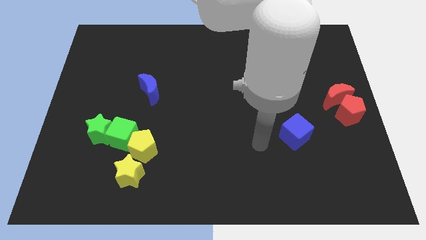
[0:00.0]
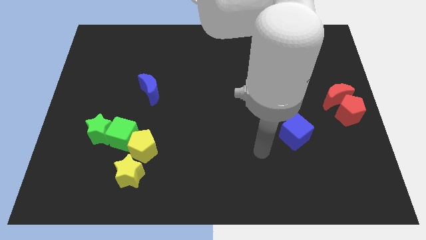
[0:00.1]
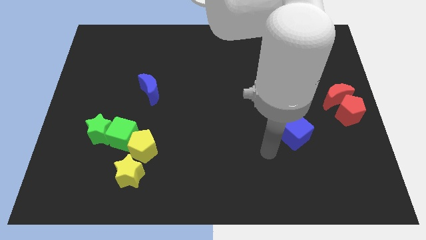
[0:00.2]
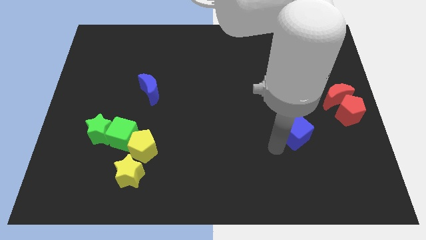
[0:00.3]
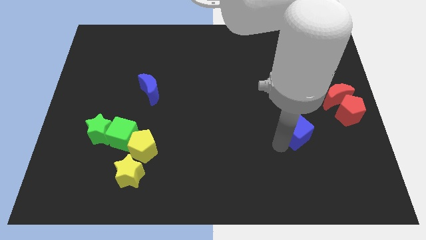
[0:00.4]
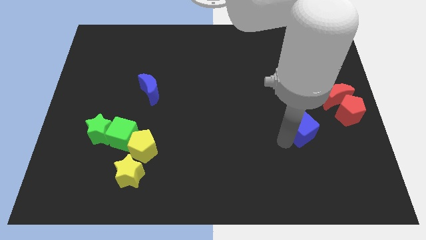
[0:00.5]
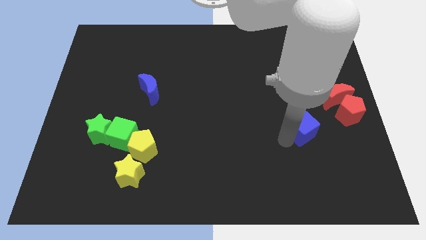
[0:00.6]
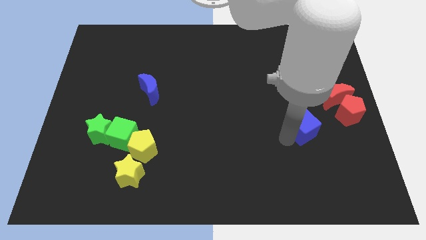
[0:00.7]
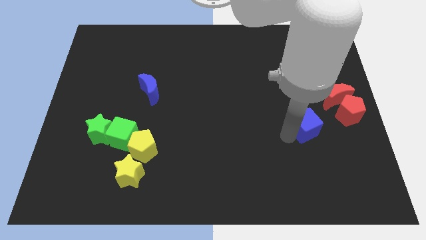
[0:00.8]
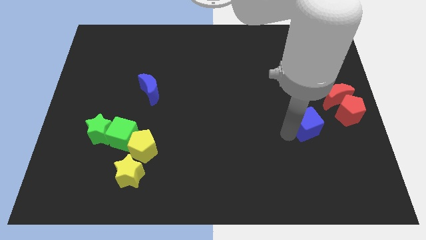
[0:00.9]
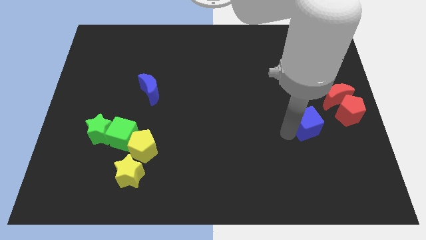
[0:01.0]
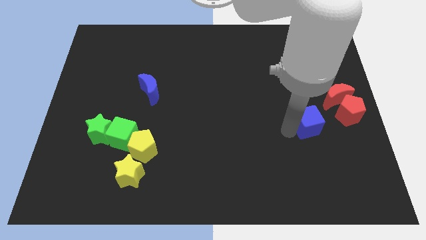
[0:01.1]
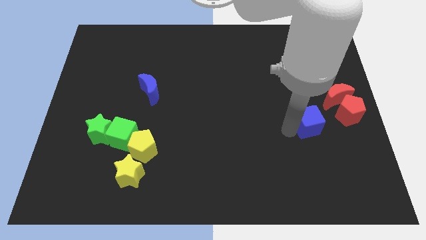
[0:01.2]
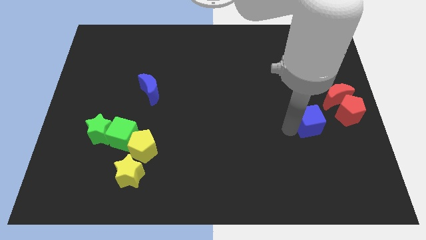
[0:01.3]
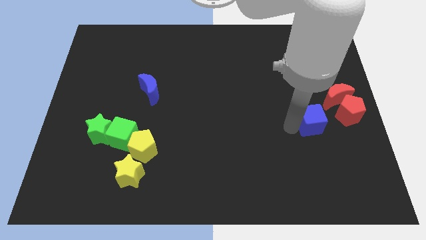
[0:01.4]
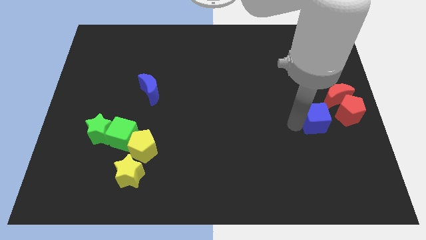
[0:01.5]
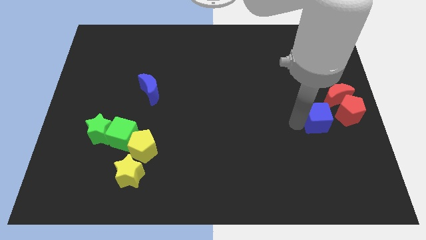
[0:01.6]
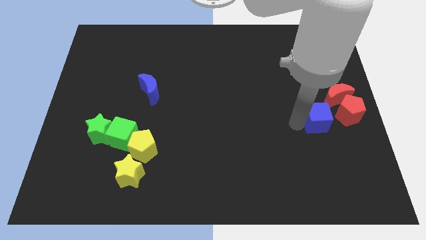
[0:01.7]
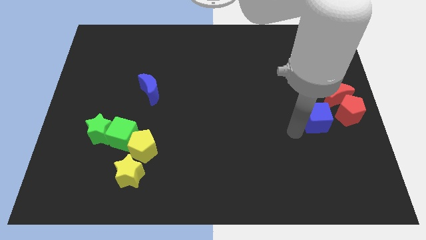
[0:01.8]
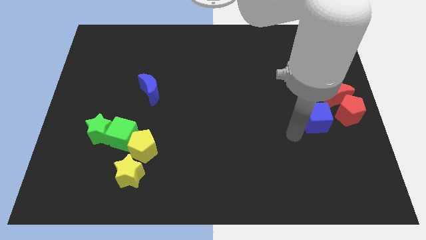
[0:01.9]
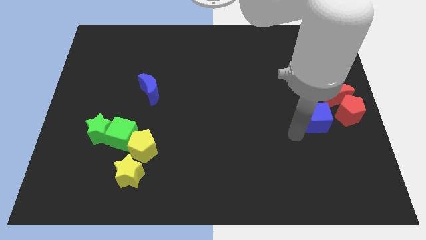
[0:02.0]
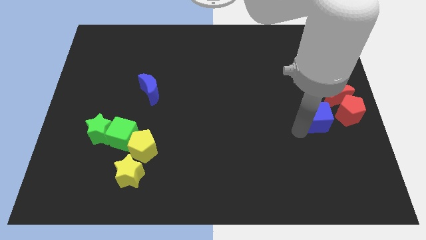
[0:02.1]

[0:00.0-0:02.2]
push the blue cube to the left of red blocks

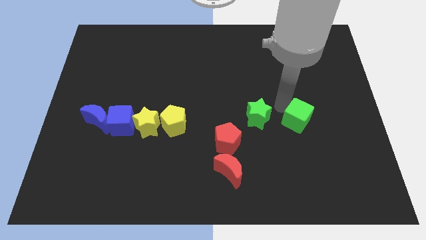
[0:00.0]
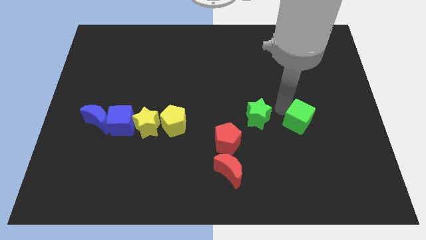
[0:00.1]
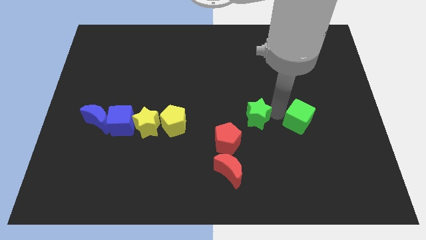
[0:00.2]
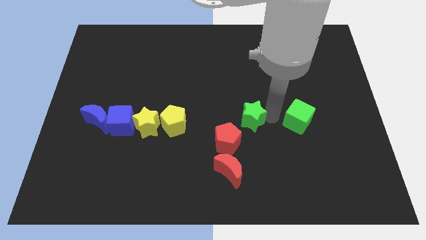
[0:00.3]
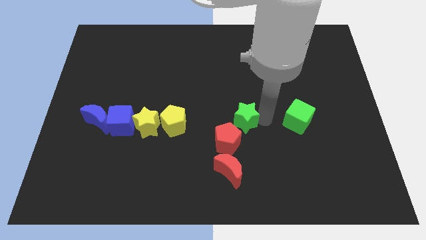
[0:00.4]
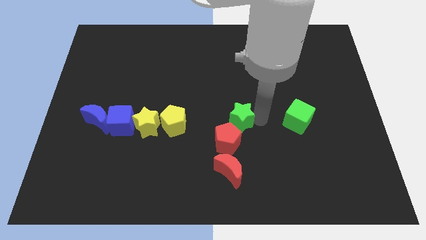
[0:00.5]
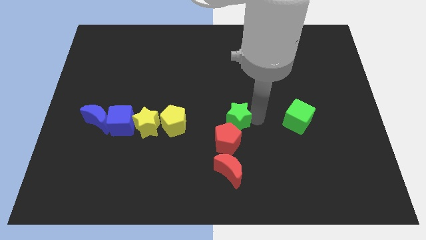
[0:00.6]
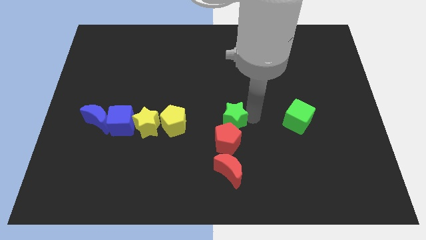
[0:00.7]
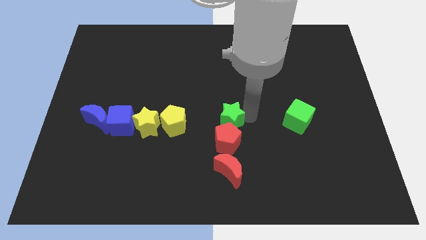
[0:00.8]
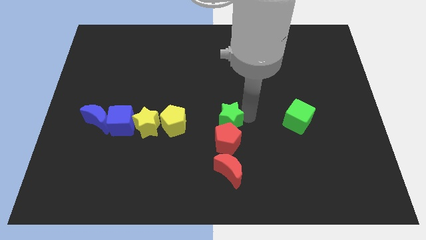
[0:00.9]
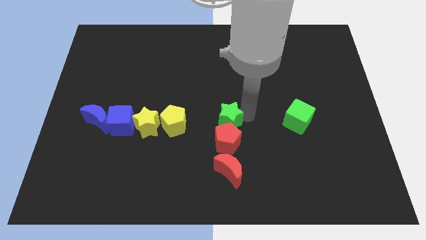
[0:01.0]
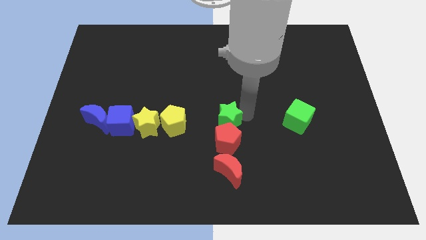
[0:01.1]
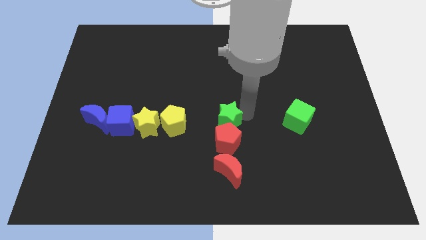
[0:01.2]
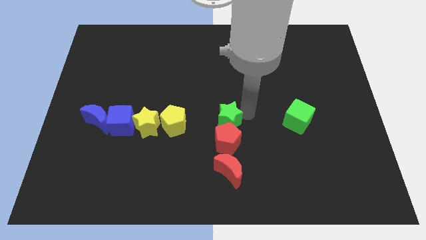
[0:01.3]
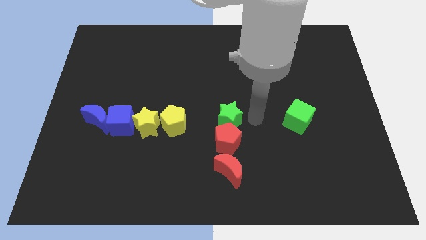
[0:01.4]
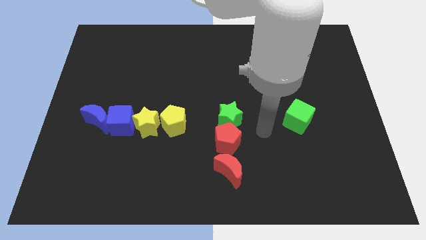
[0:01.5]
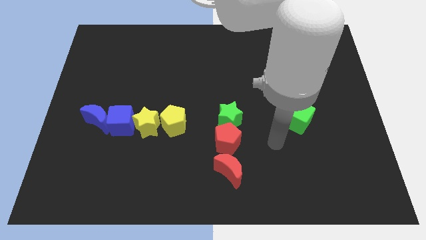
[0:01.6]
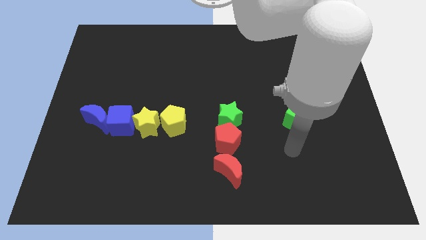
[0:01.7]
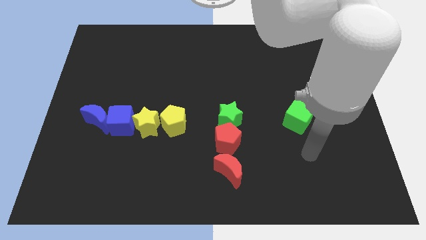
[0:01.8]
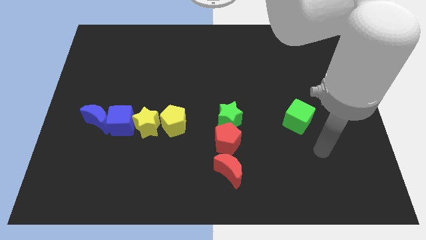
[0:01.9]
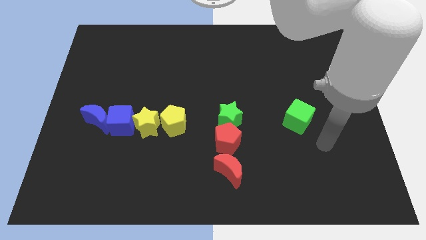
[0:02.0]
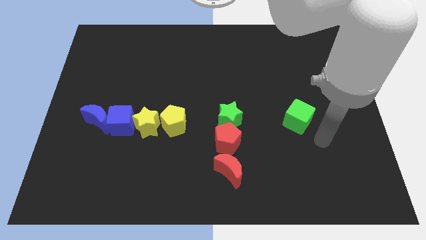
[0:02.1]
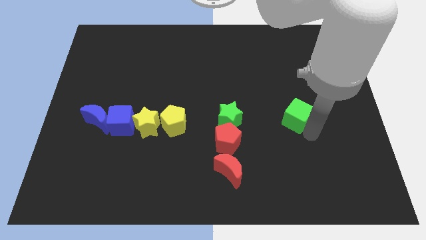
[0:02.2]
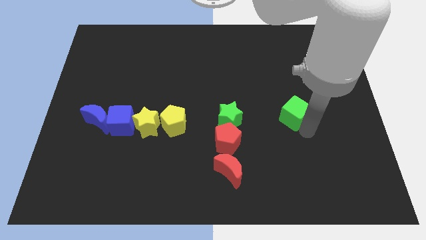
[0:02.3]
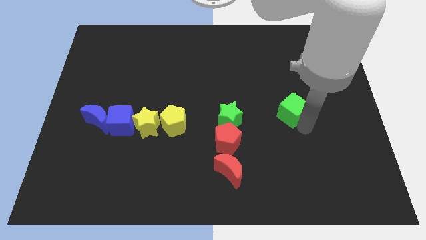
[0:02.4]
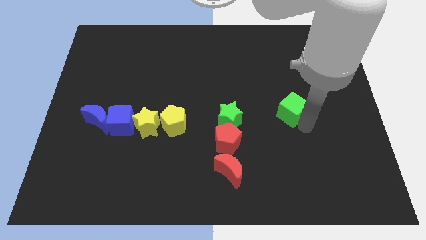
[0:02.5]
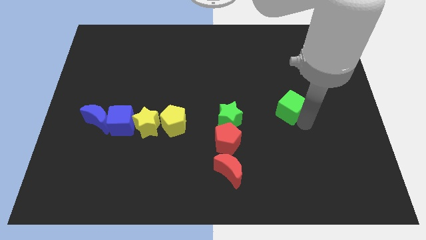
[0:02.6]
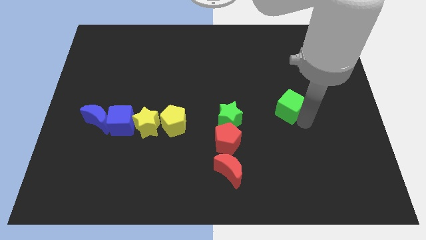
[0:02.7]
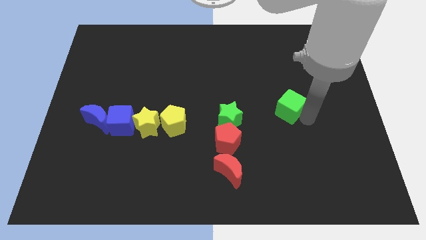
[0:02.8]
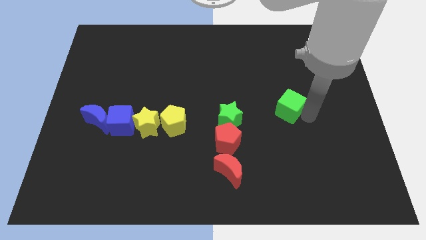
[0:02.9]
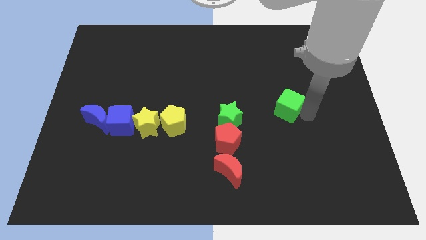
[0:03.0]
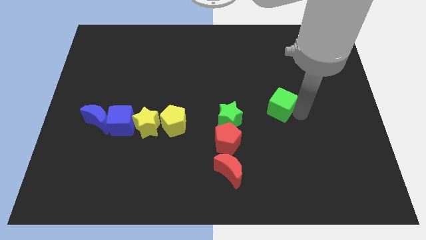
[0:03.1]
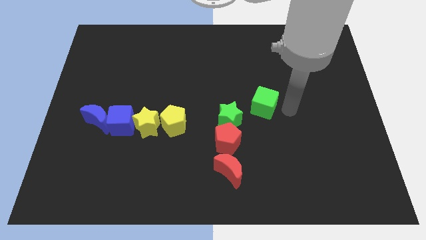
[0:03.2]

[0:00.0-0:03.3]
place the green cube diagonally top right to the red pentagon

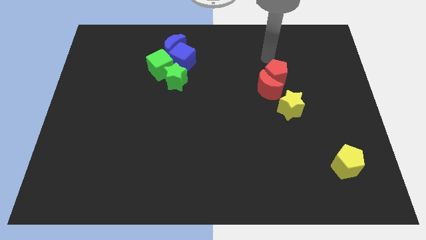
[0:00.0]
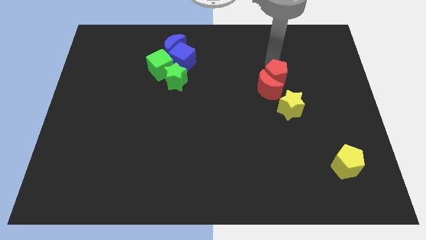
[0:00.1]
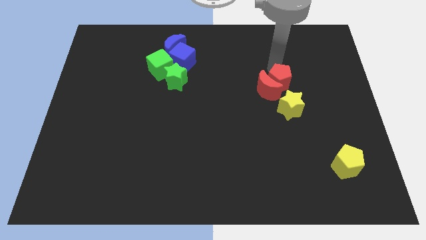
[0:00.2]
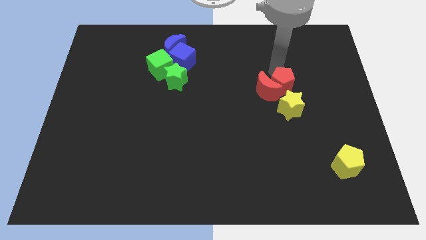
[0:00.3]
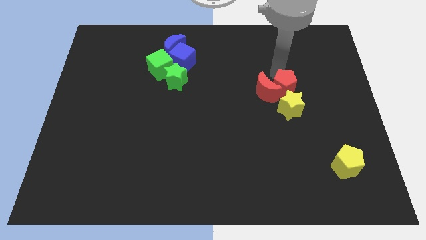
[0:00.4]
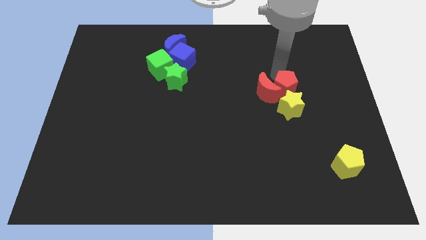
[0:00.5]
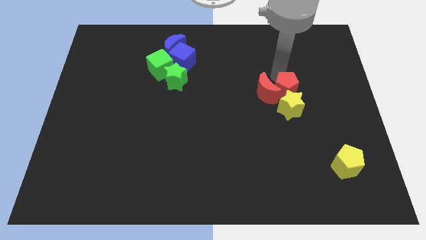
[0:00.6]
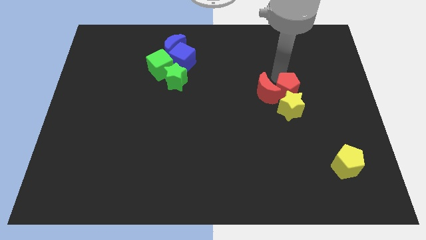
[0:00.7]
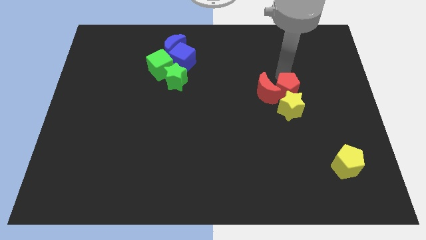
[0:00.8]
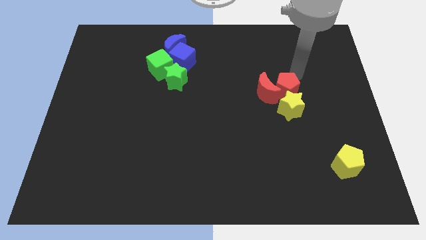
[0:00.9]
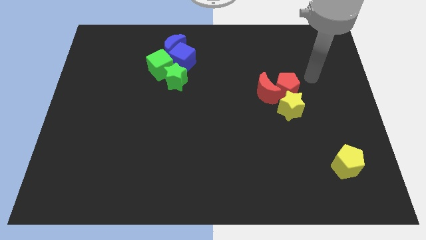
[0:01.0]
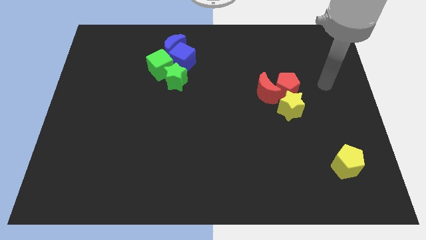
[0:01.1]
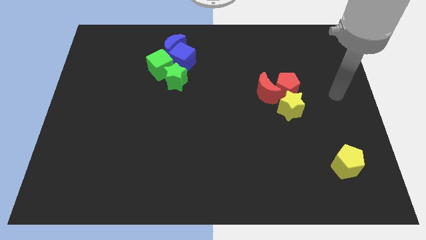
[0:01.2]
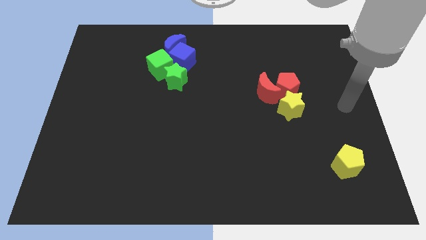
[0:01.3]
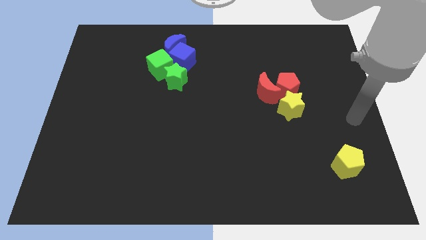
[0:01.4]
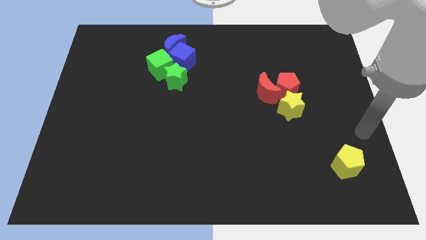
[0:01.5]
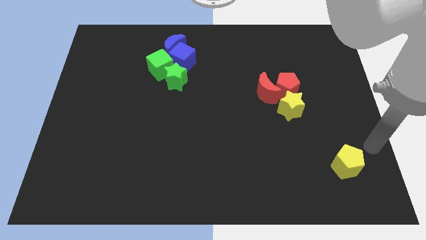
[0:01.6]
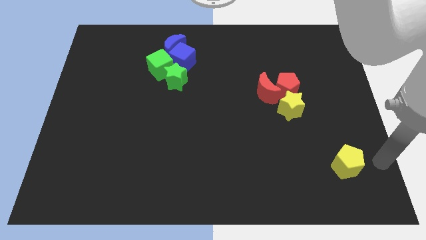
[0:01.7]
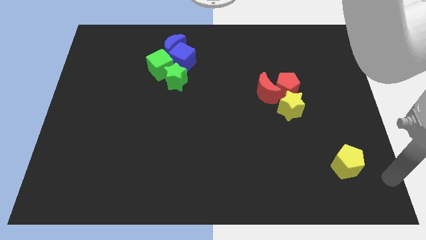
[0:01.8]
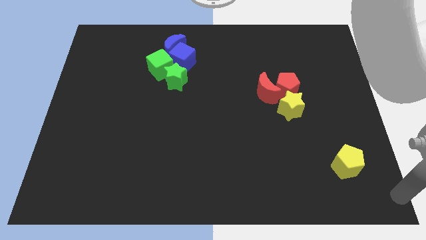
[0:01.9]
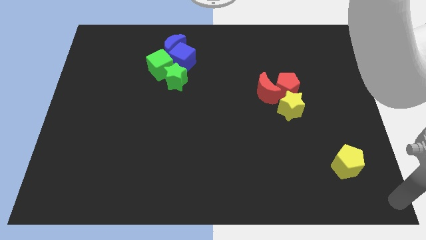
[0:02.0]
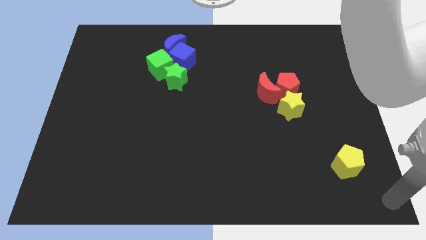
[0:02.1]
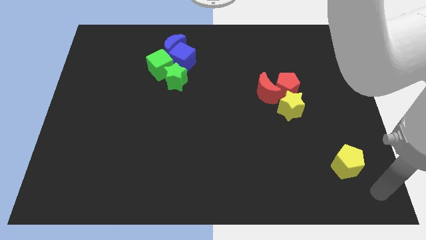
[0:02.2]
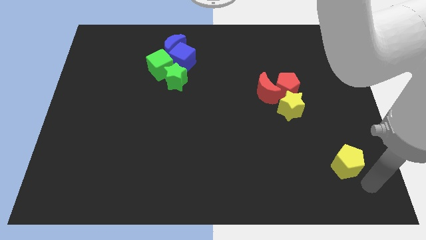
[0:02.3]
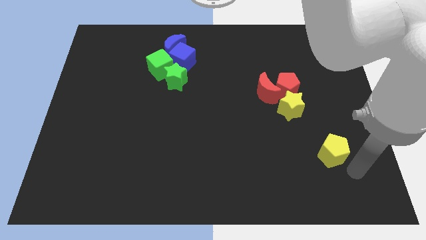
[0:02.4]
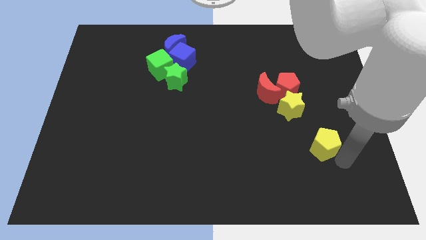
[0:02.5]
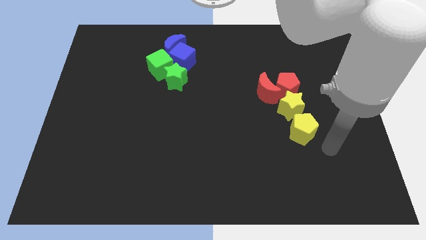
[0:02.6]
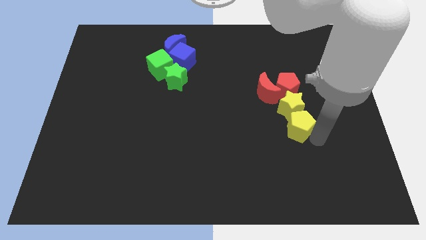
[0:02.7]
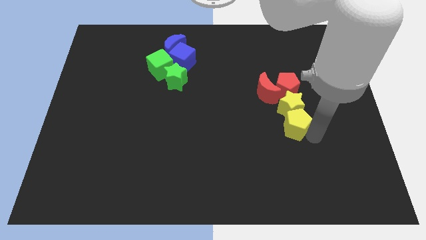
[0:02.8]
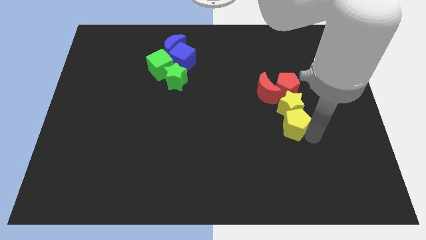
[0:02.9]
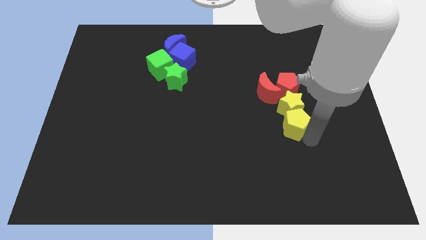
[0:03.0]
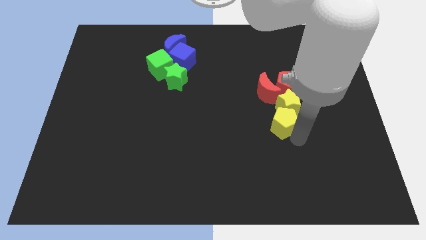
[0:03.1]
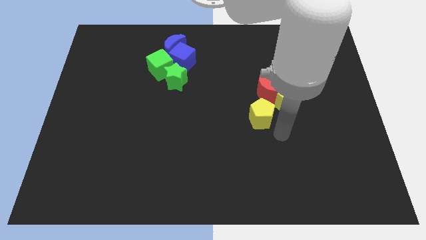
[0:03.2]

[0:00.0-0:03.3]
push yellow pentagon into the group of blocks
